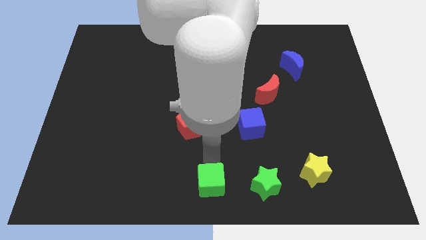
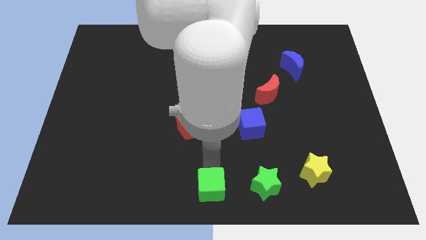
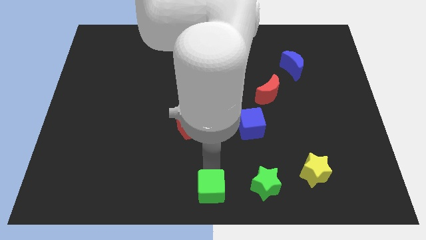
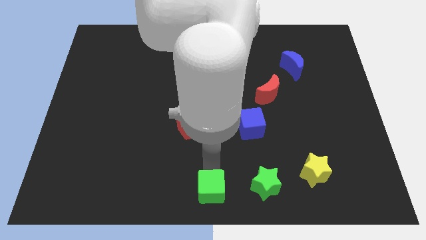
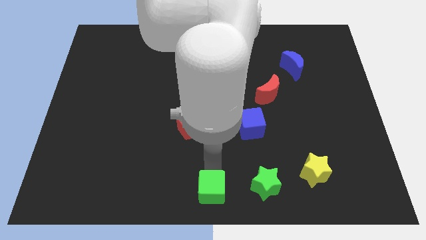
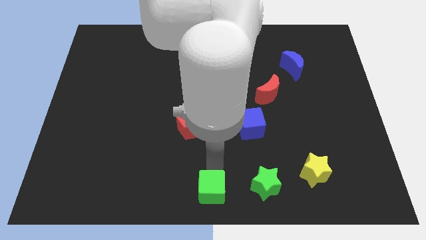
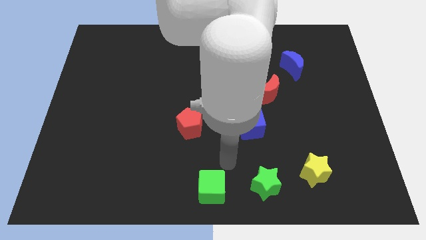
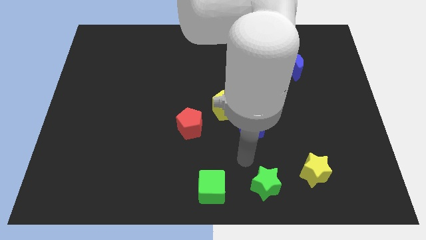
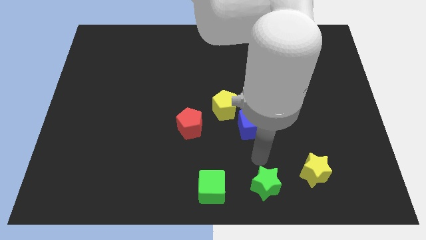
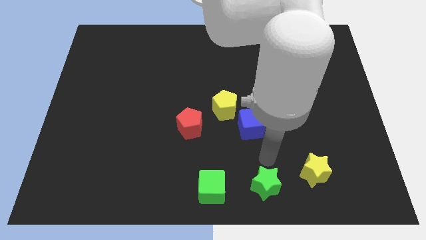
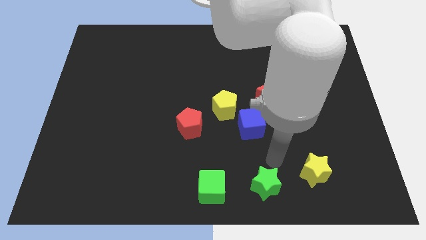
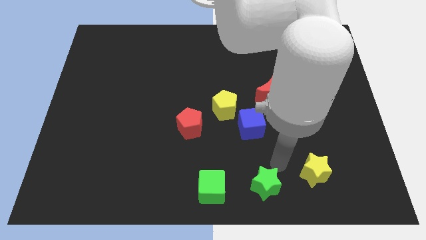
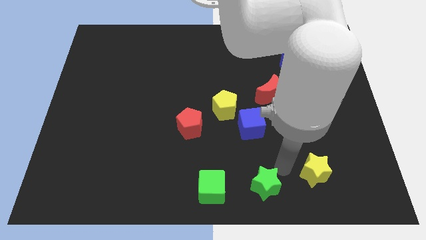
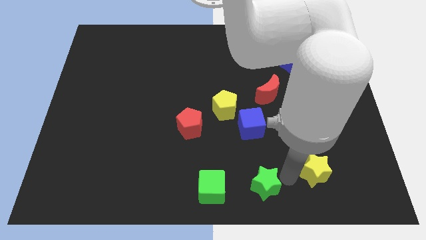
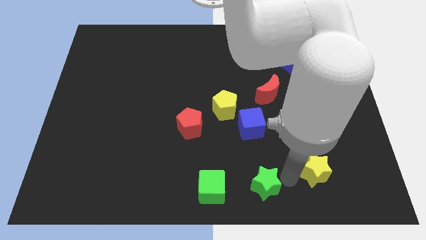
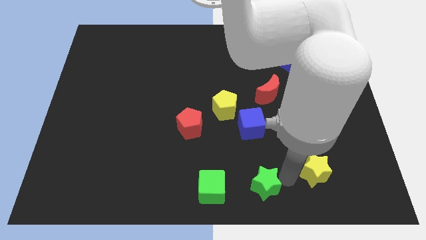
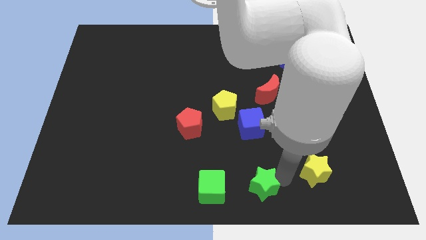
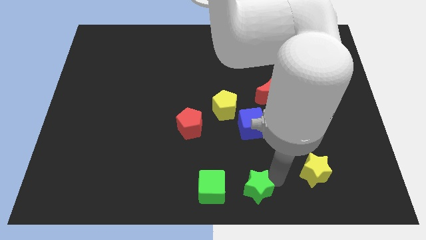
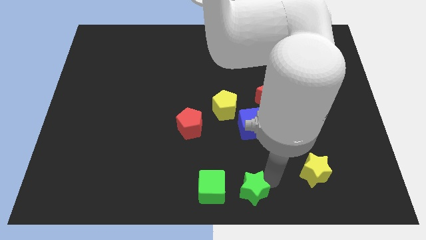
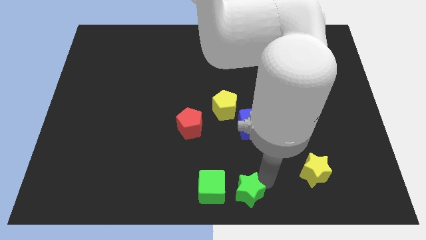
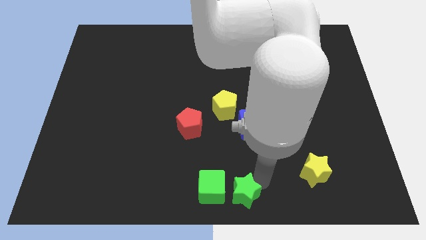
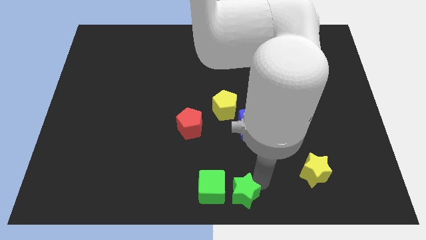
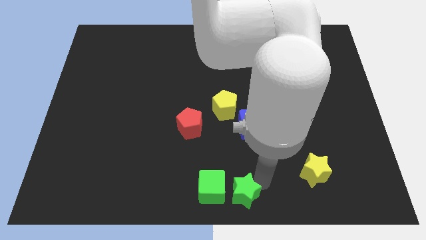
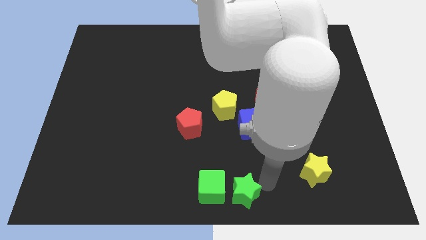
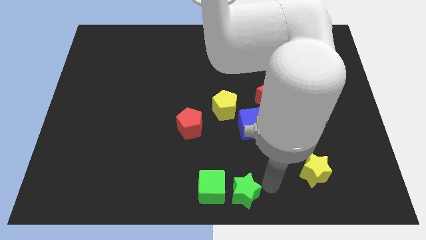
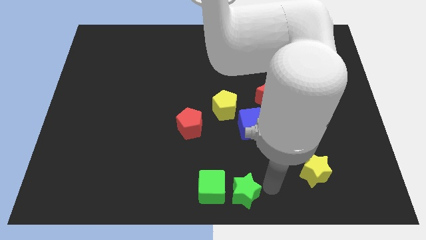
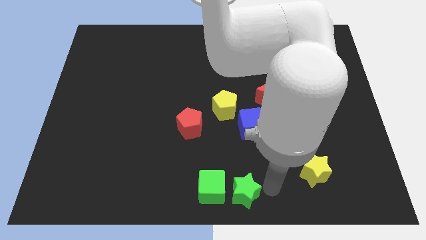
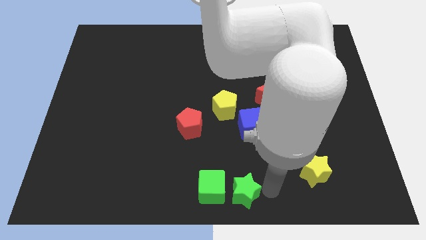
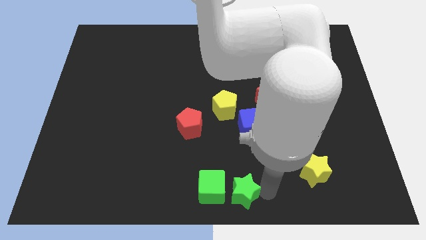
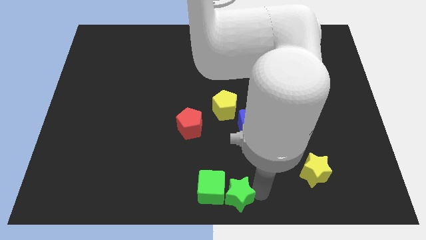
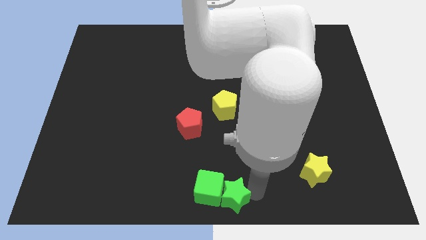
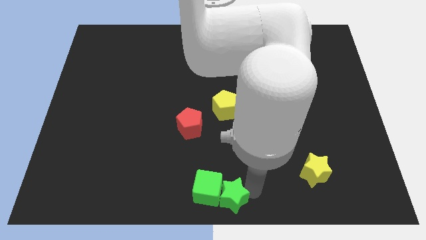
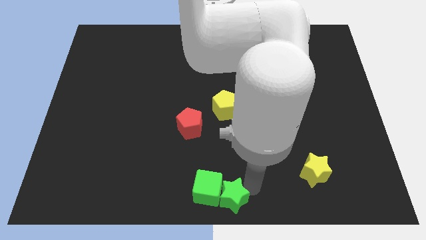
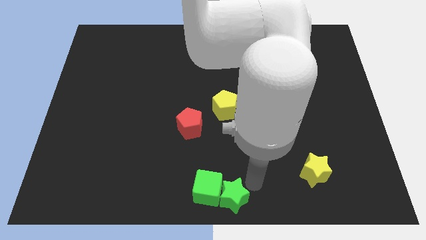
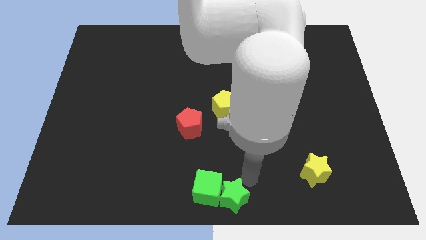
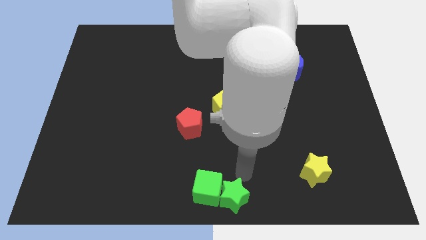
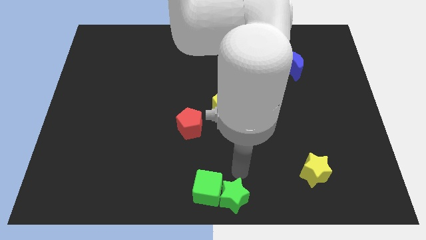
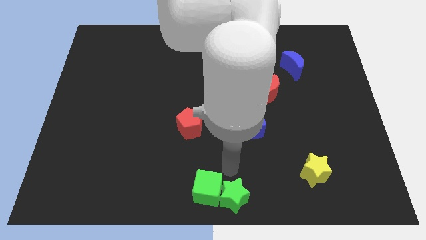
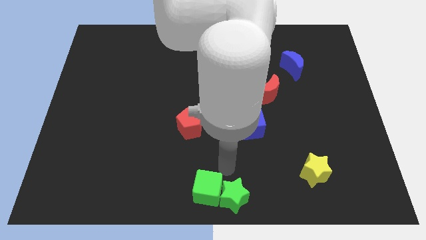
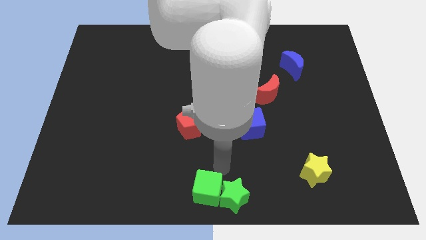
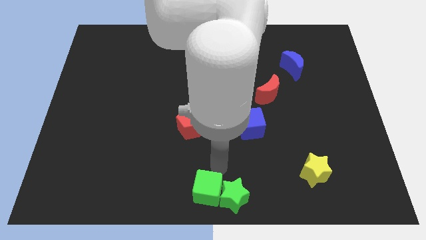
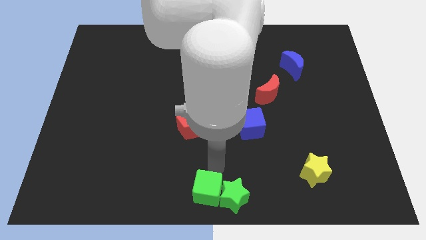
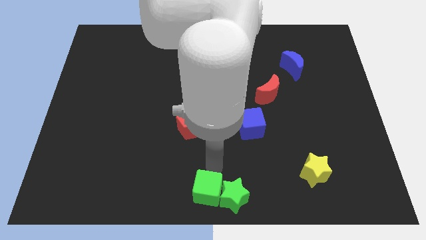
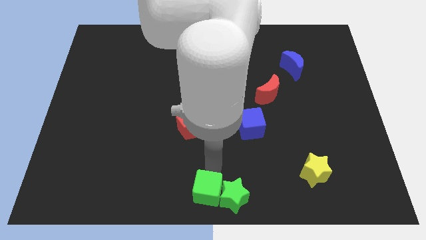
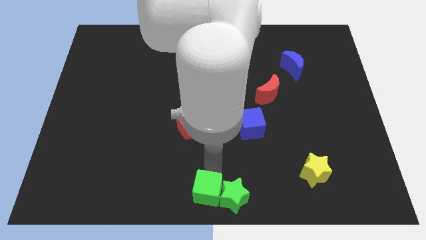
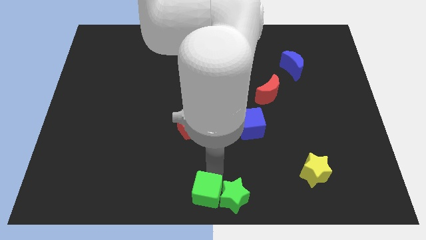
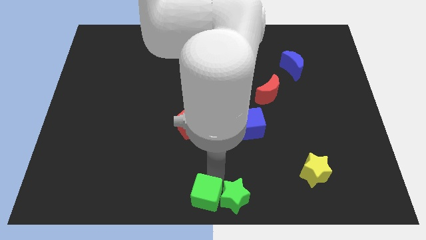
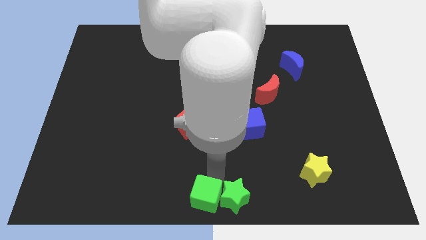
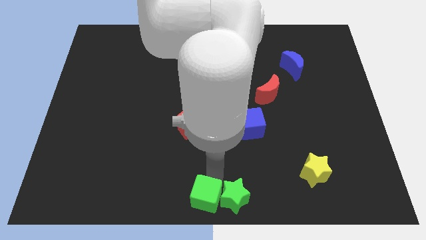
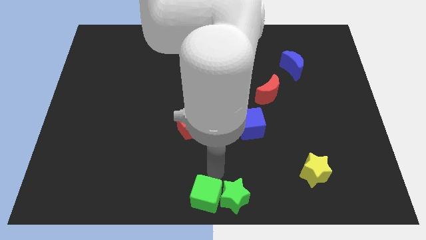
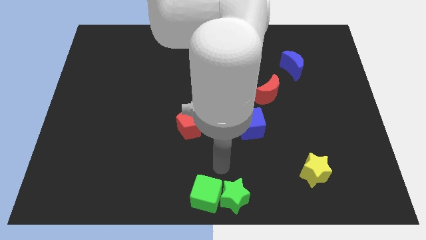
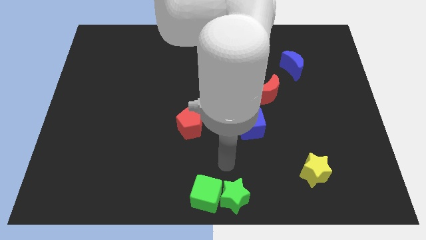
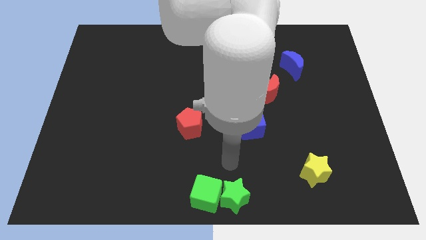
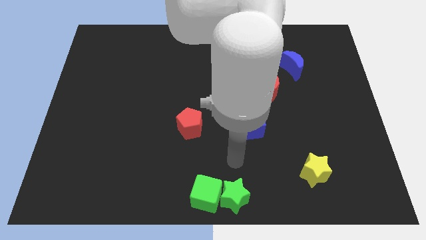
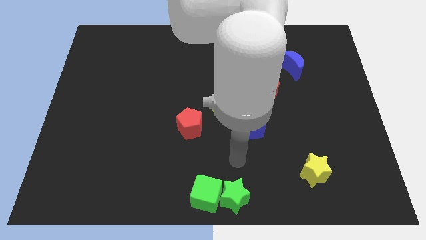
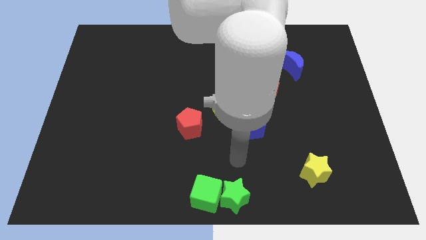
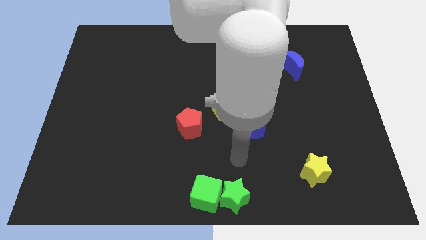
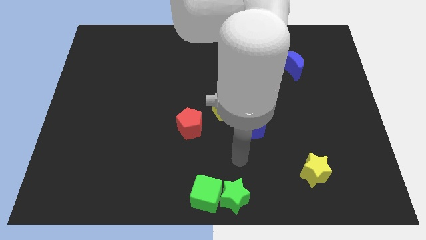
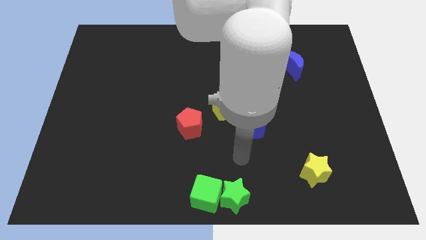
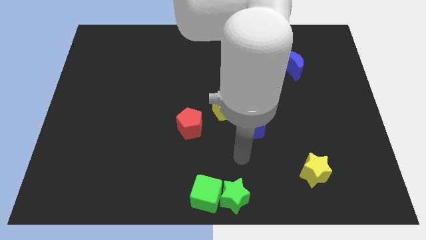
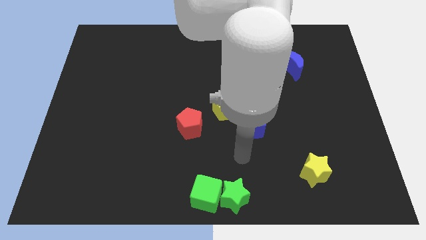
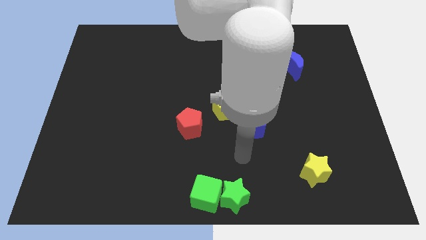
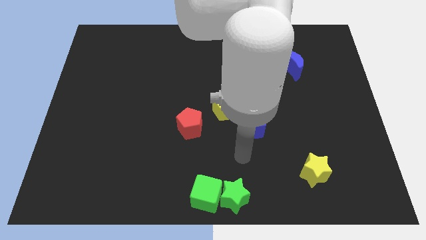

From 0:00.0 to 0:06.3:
move the green blocks to the bottom center

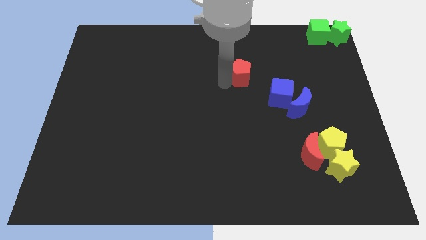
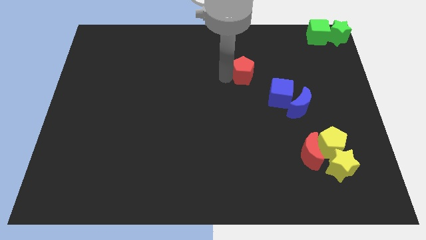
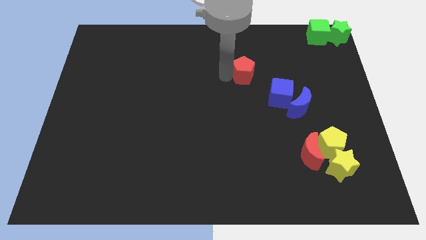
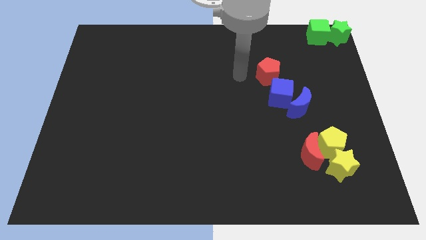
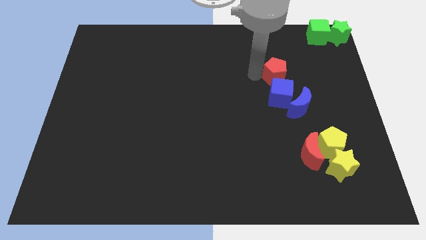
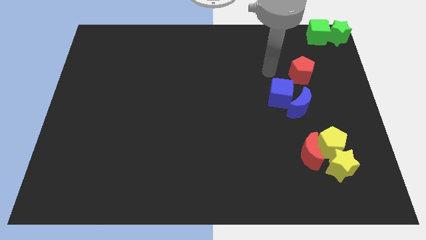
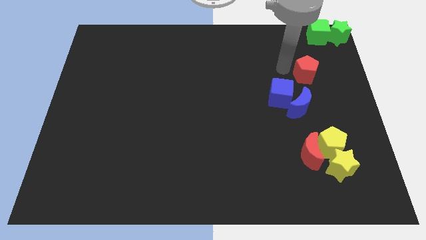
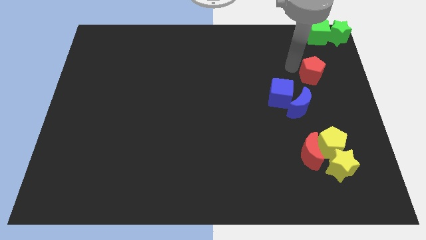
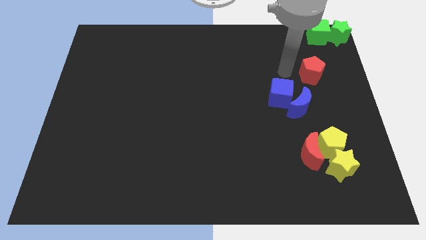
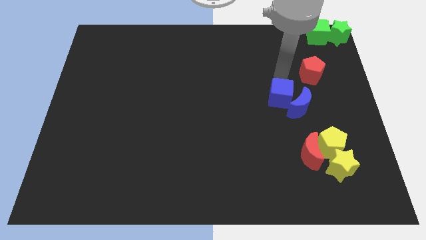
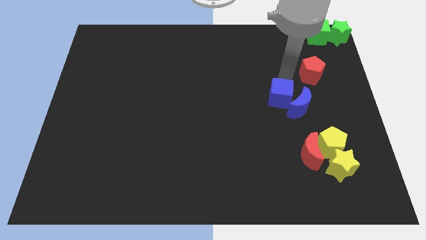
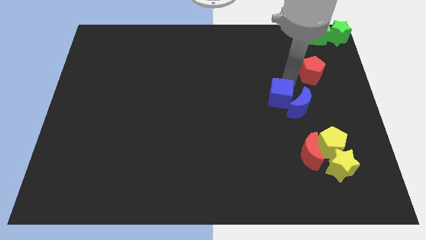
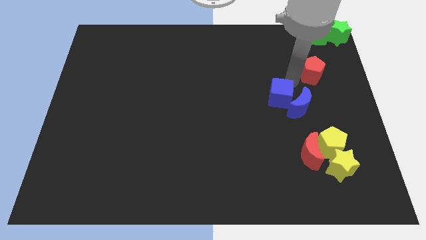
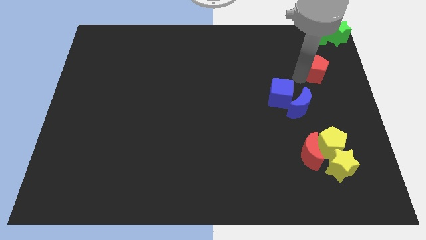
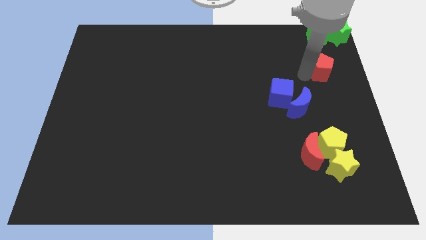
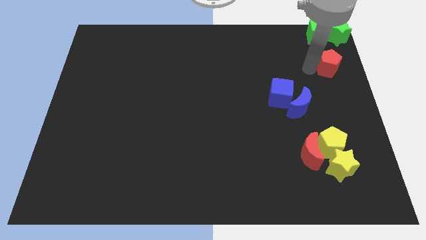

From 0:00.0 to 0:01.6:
place the red pentagon diagonally above the blue crescent

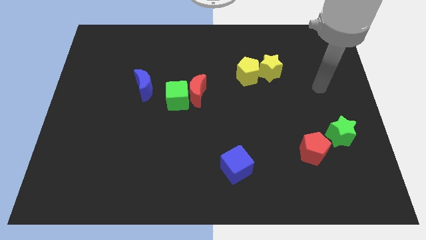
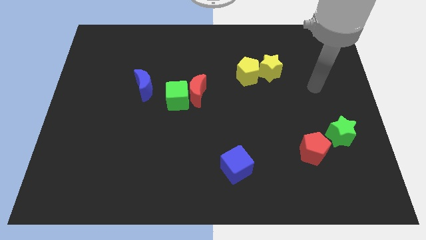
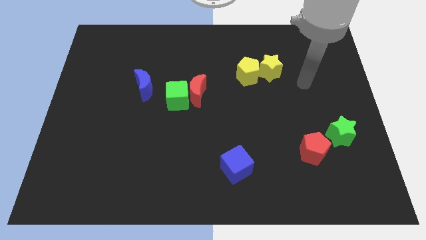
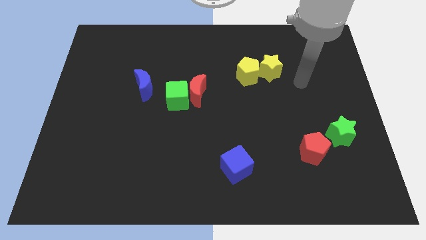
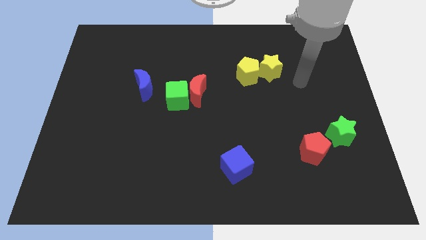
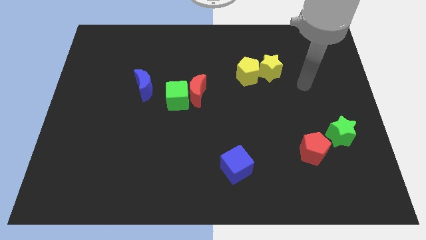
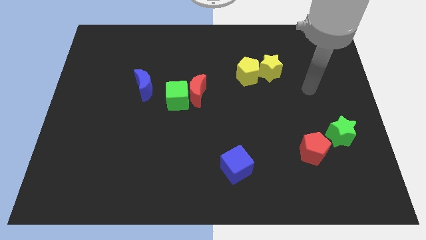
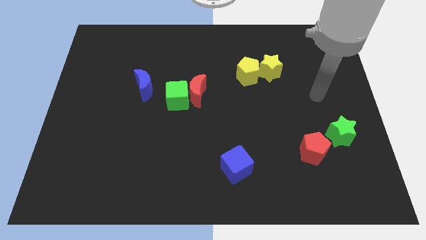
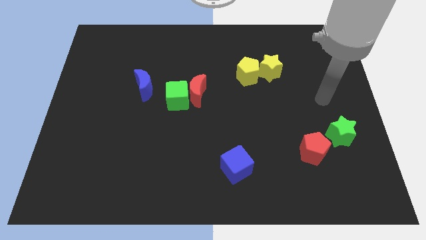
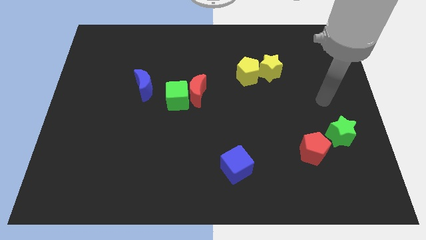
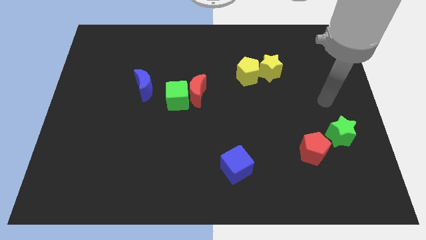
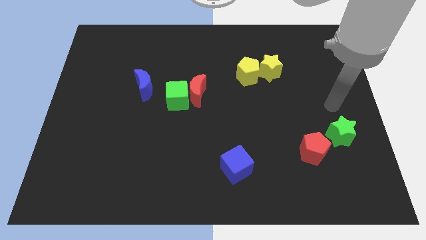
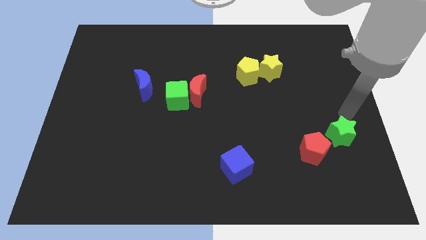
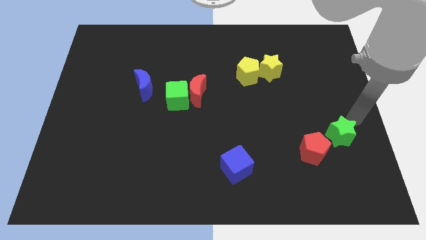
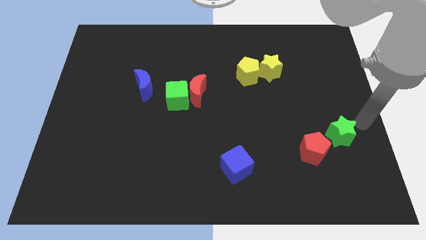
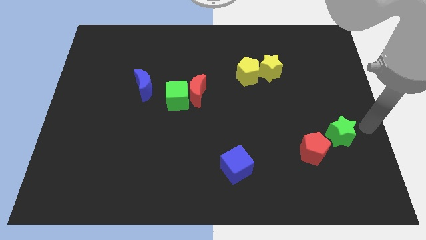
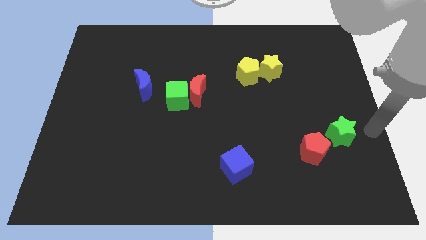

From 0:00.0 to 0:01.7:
point your arm to the right of the green star
